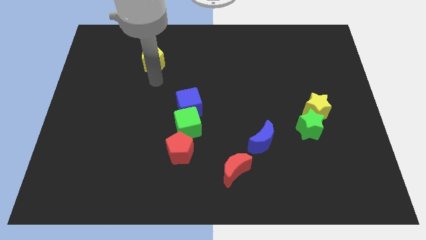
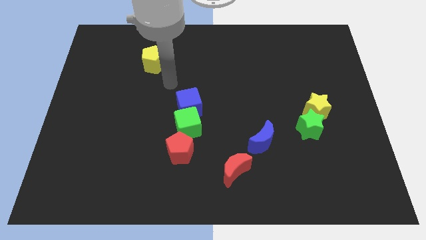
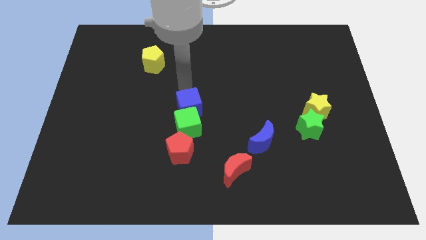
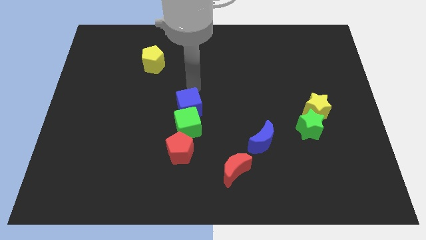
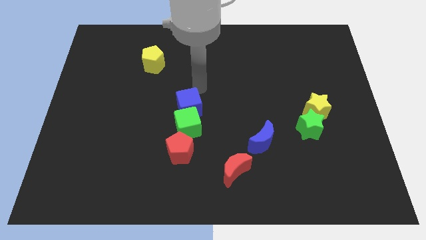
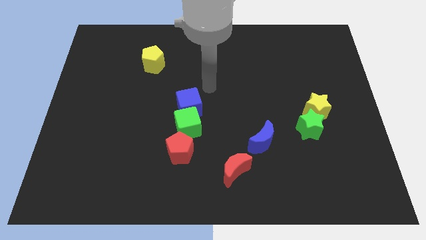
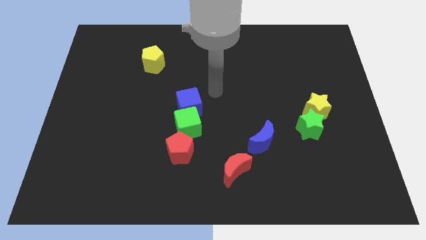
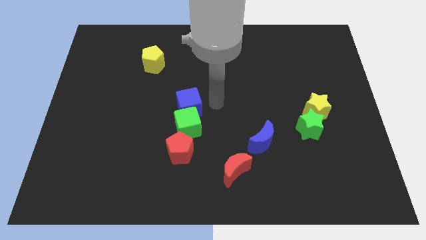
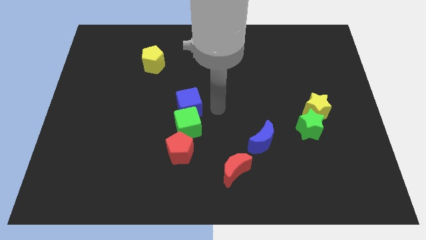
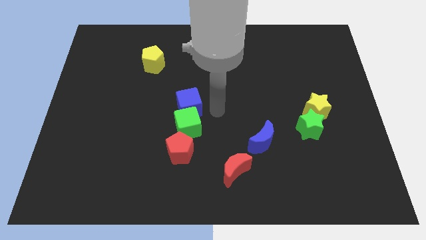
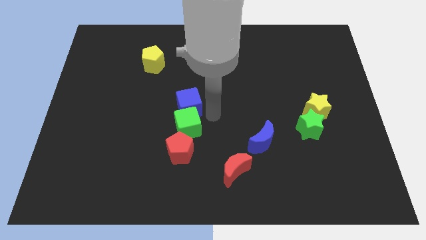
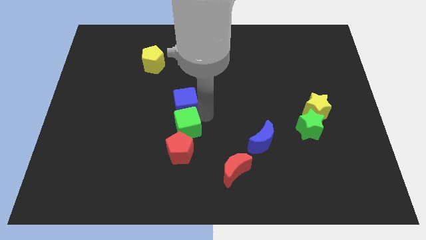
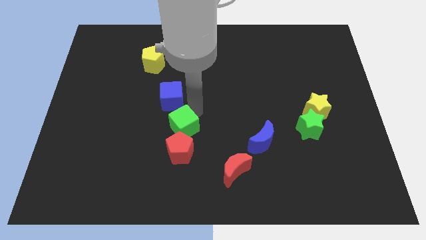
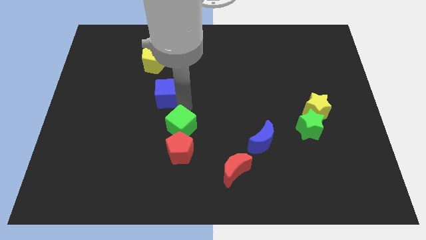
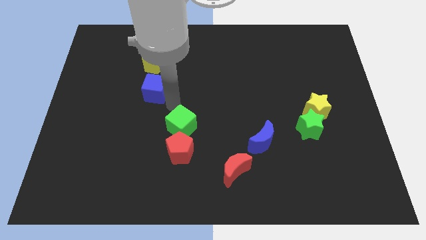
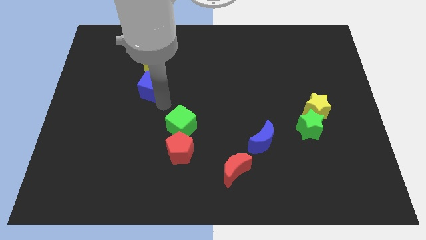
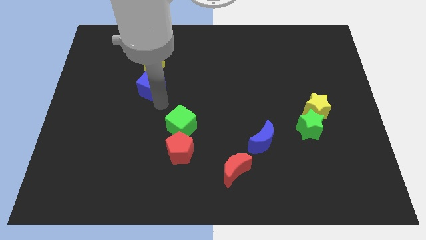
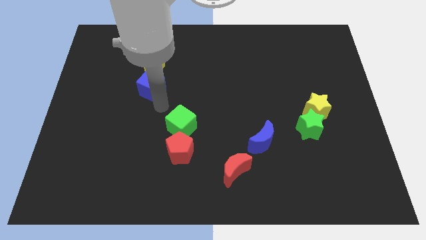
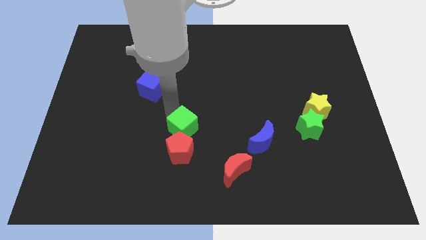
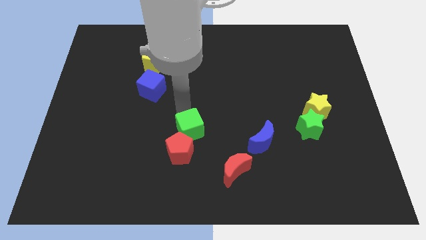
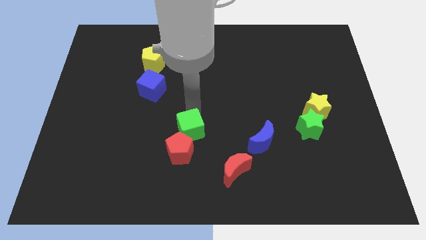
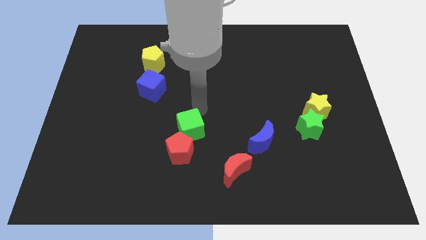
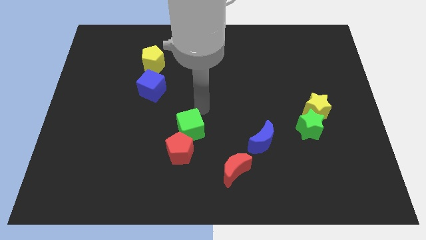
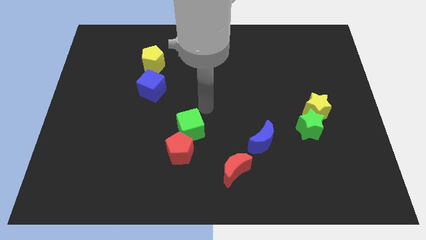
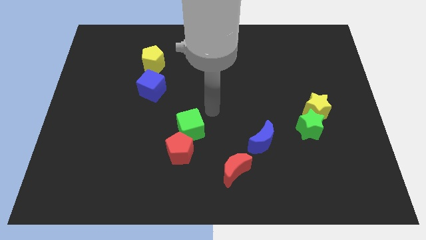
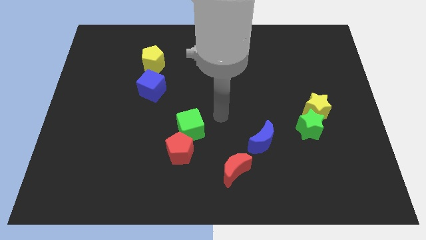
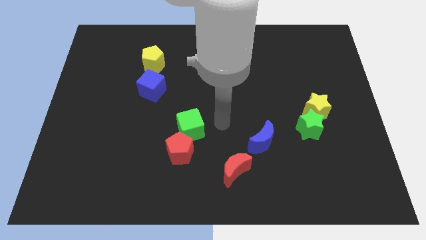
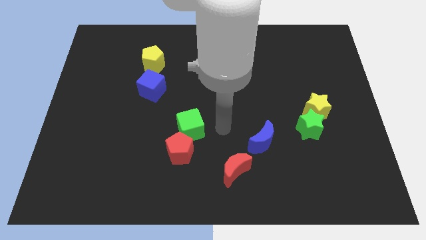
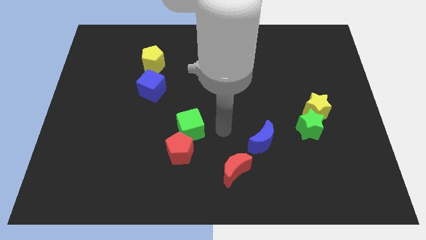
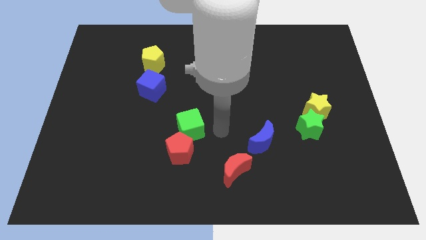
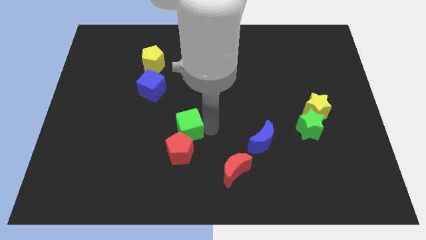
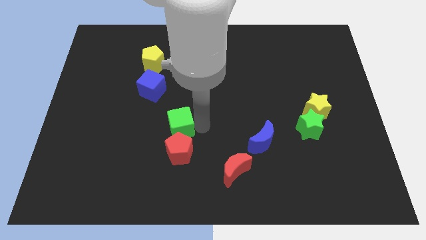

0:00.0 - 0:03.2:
separate blue cube and the green cube

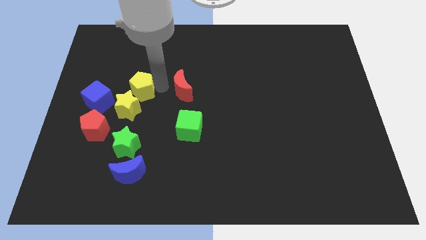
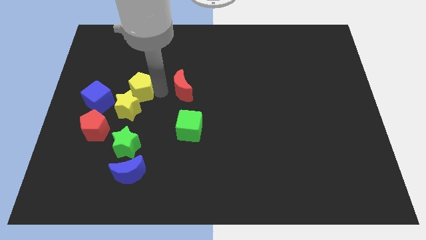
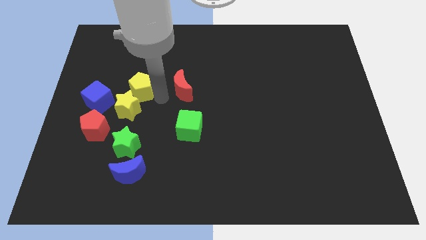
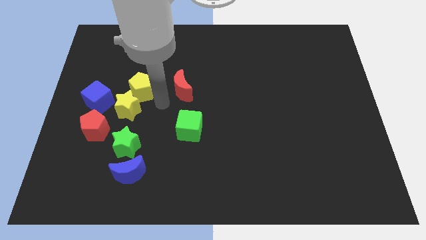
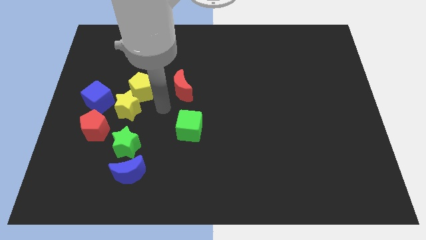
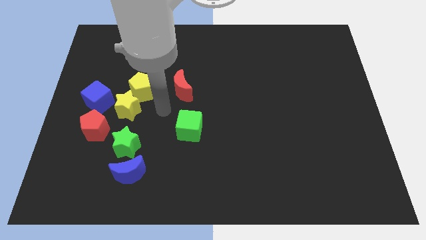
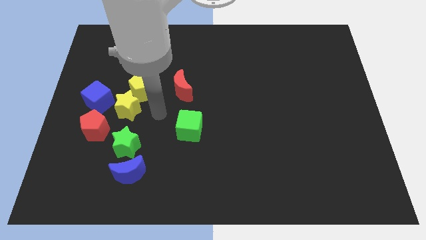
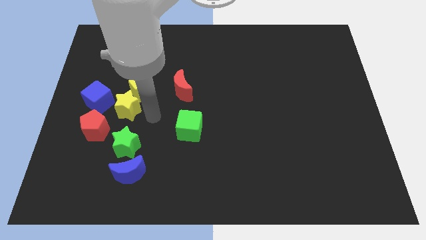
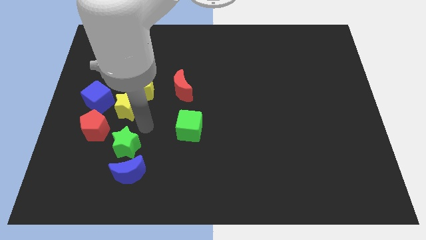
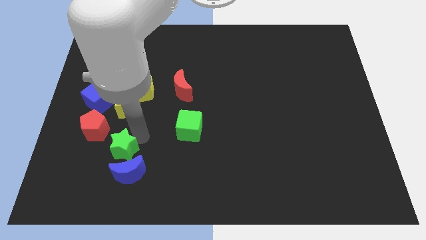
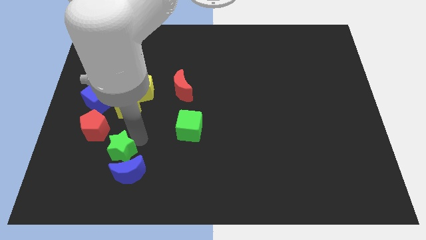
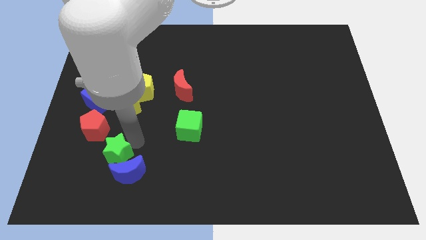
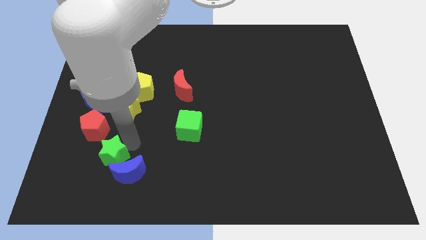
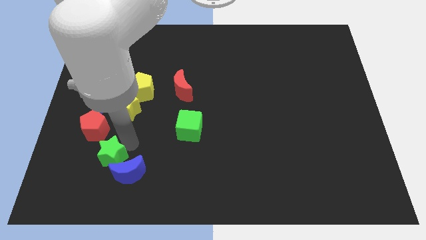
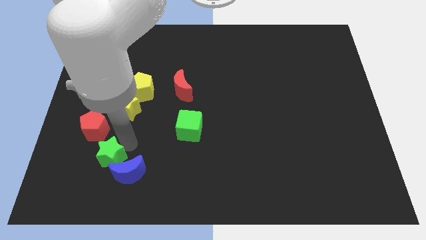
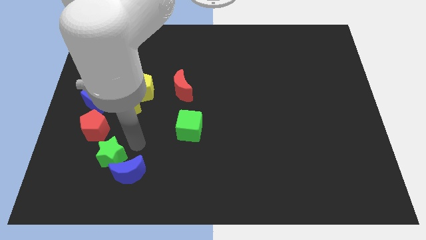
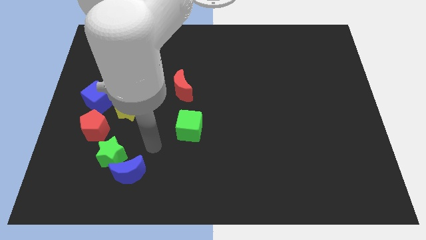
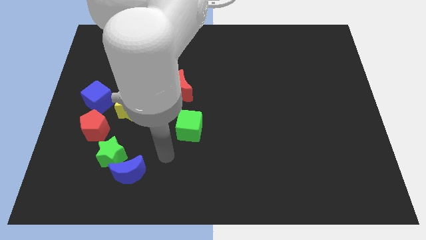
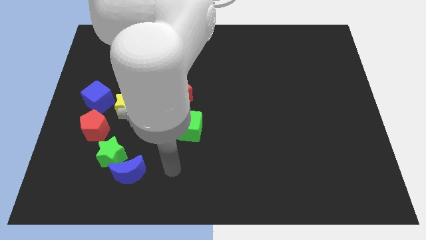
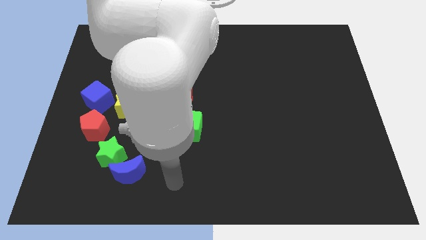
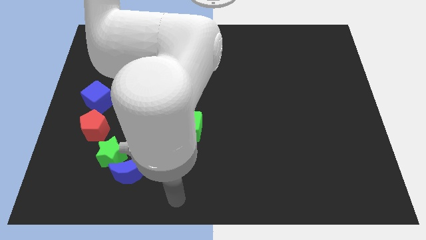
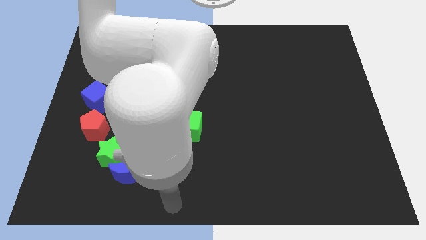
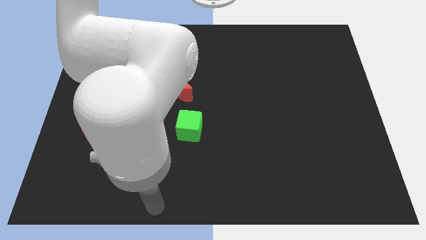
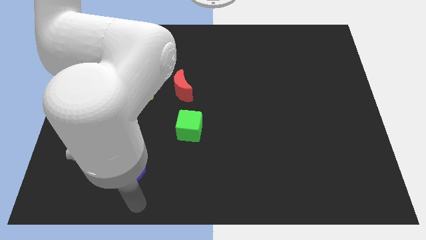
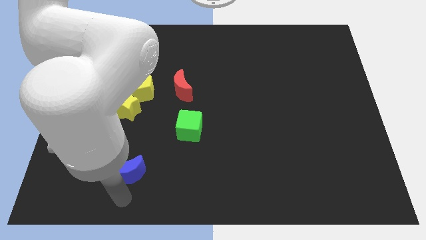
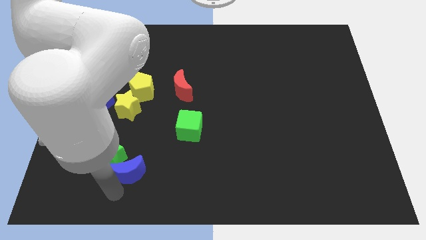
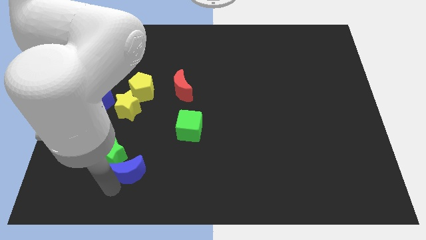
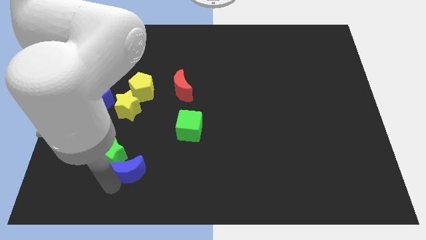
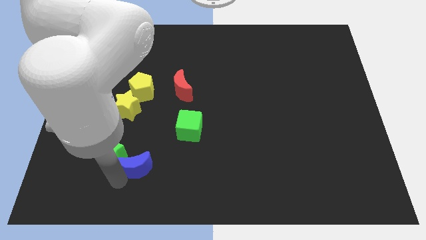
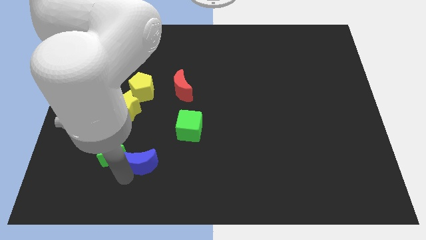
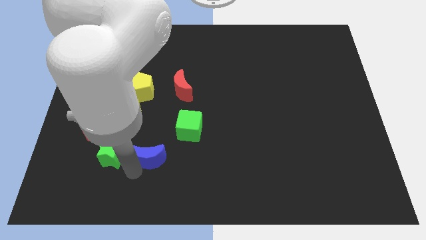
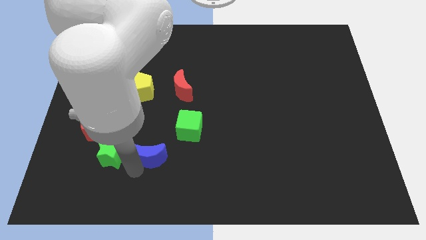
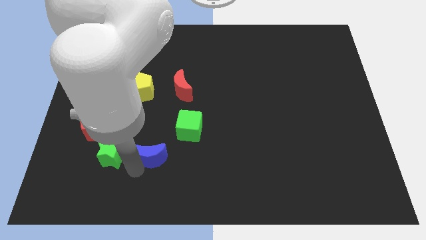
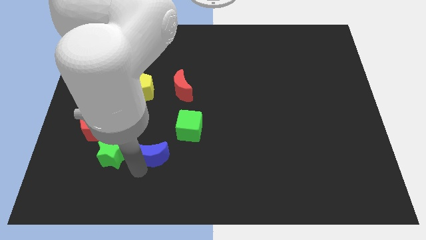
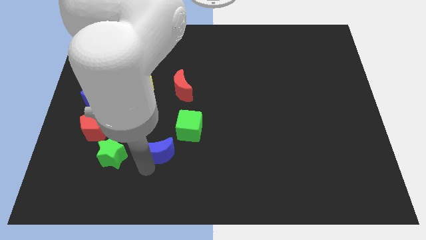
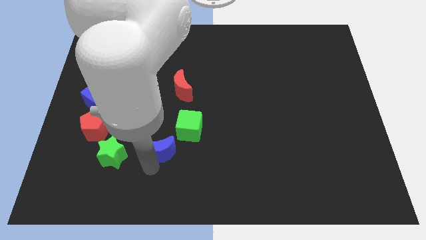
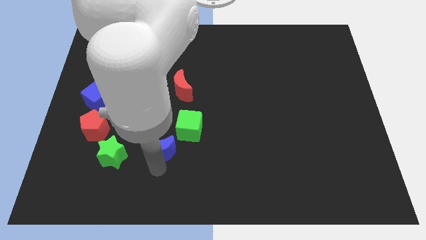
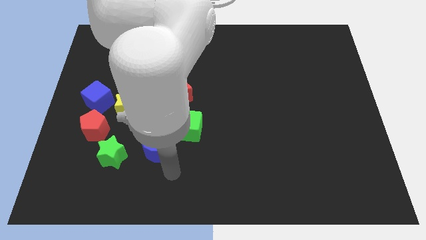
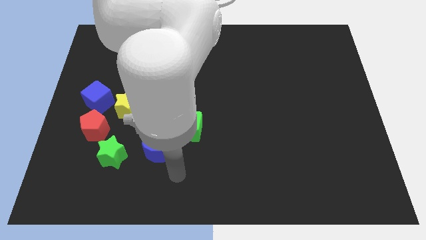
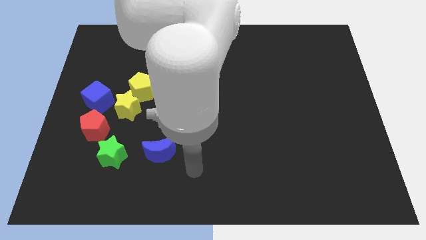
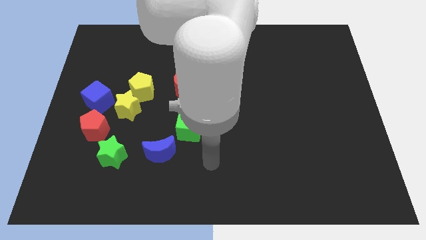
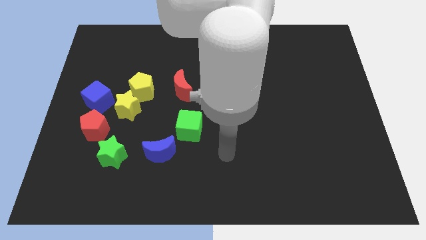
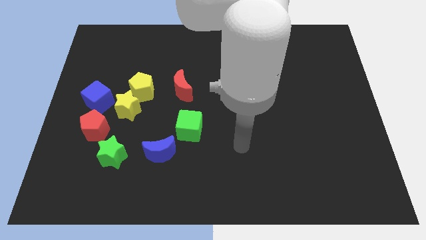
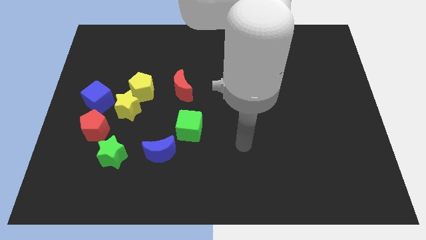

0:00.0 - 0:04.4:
push the blue moon close to the green cube

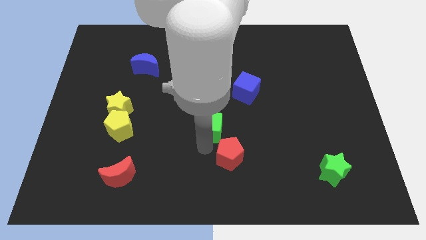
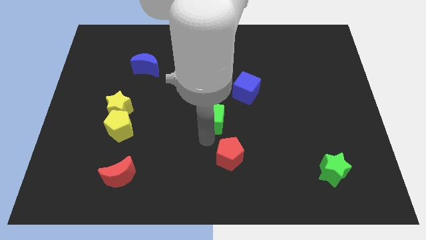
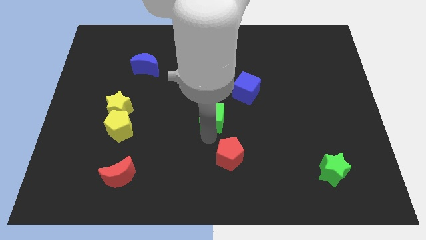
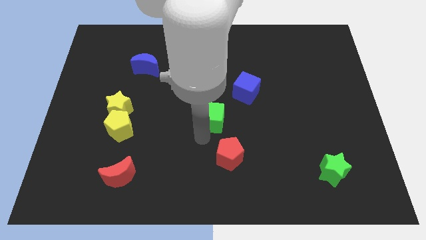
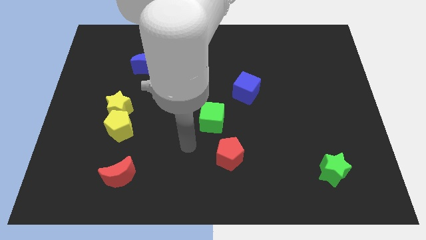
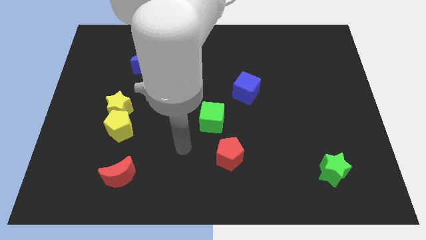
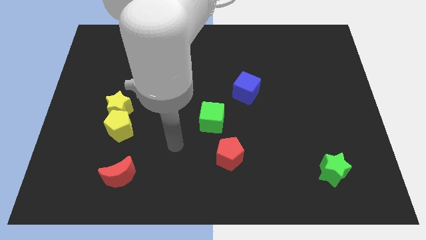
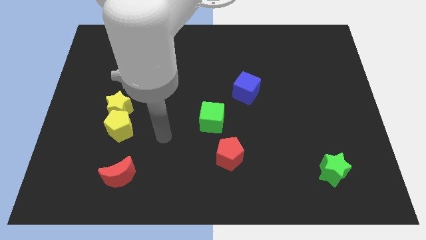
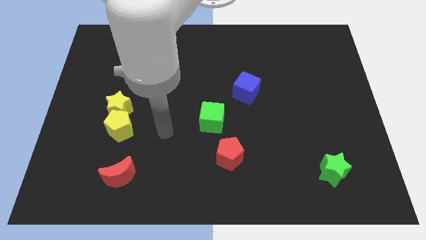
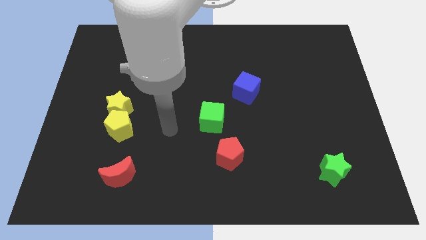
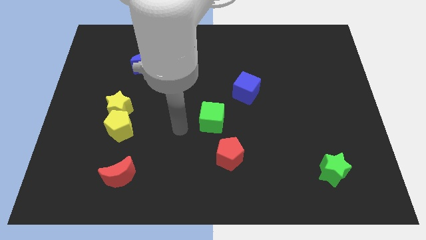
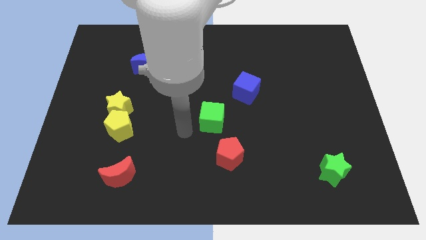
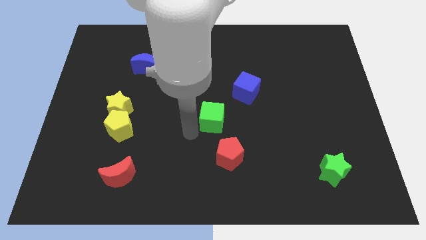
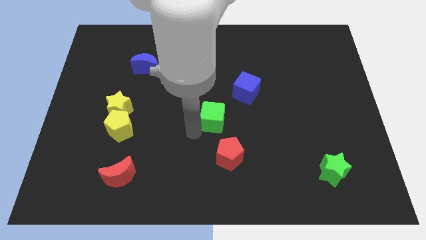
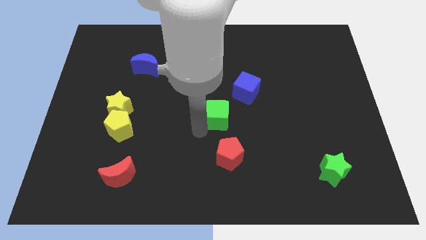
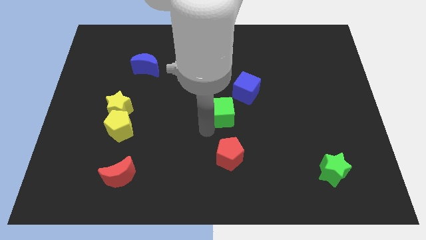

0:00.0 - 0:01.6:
move the green cube vertically above the red pentagon
